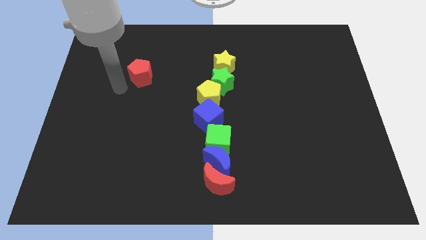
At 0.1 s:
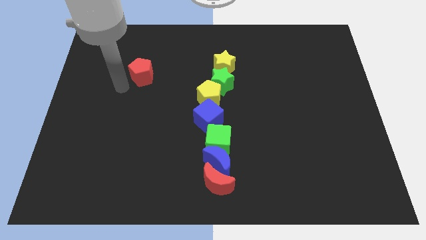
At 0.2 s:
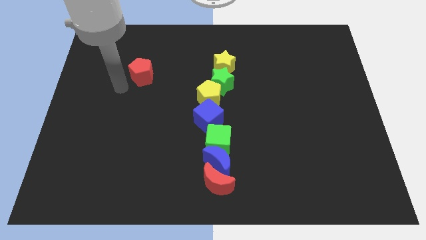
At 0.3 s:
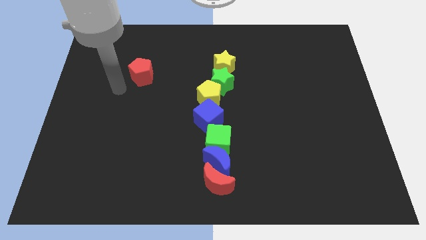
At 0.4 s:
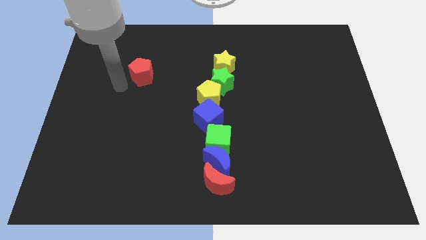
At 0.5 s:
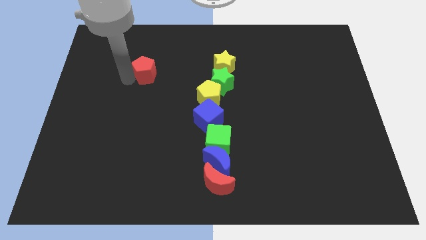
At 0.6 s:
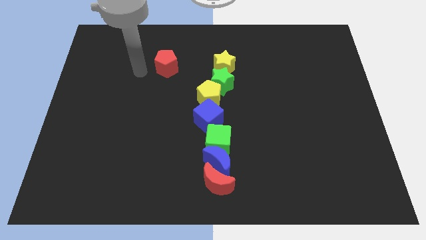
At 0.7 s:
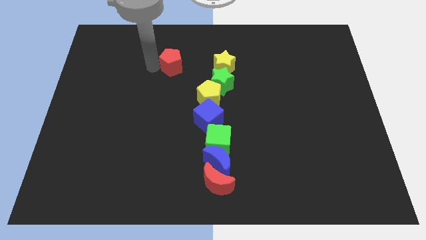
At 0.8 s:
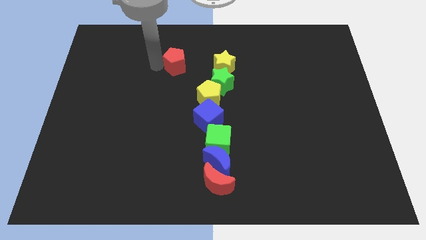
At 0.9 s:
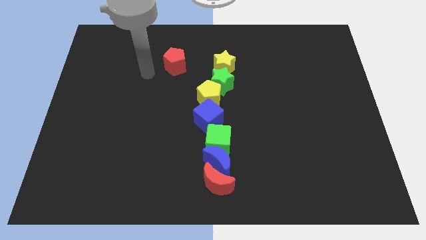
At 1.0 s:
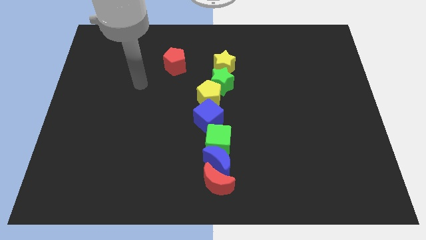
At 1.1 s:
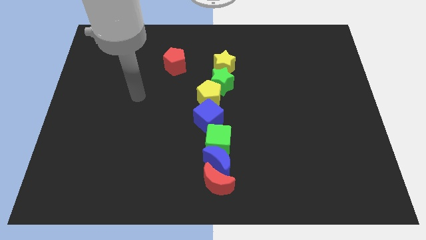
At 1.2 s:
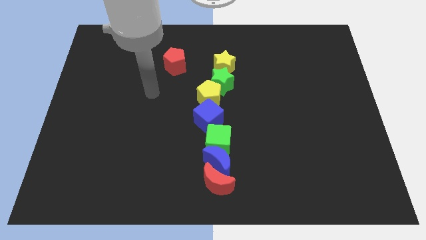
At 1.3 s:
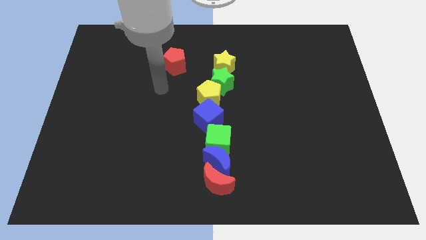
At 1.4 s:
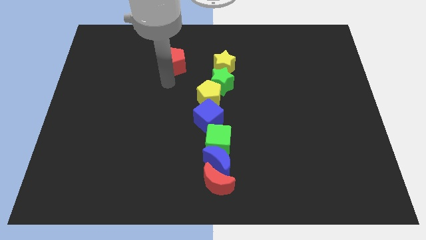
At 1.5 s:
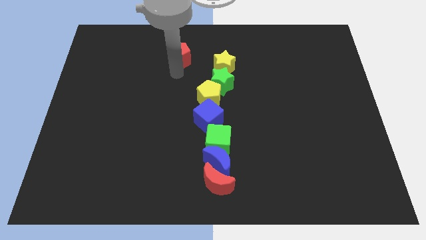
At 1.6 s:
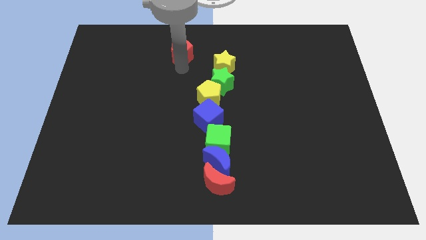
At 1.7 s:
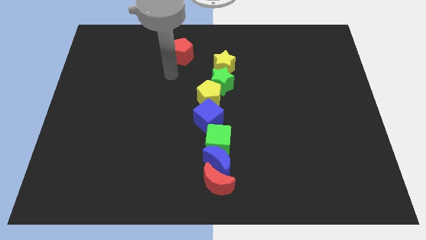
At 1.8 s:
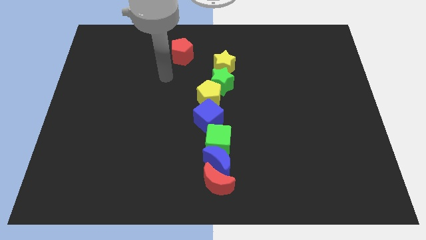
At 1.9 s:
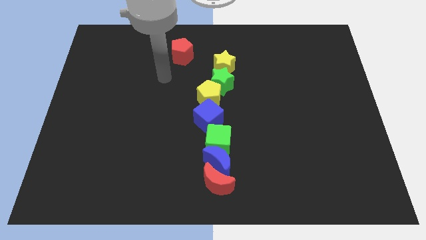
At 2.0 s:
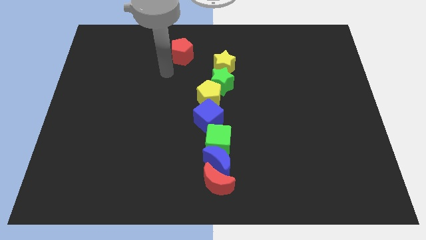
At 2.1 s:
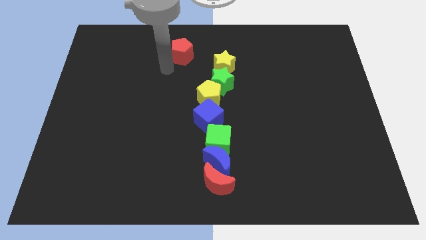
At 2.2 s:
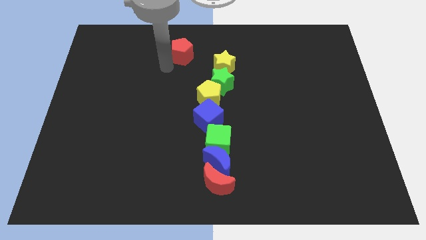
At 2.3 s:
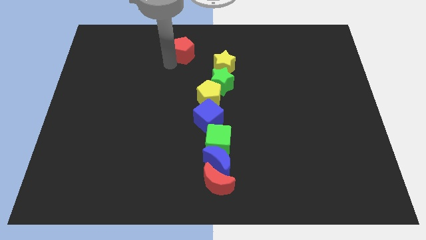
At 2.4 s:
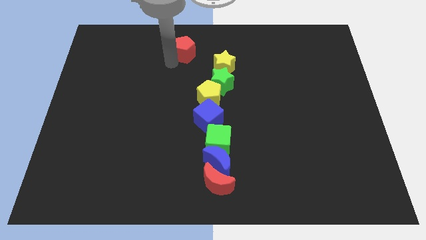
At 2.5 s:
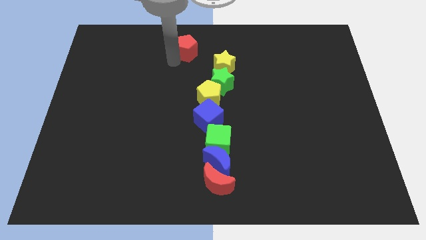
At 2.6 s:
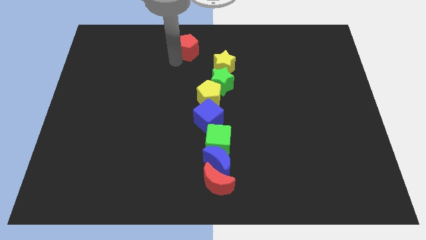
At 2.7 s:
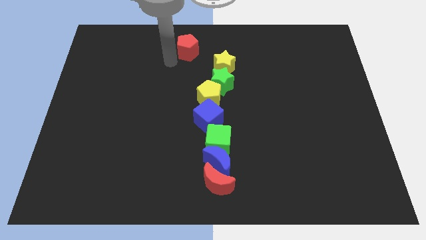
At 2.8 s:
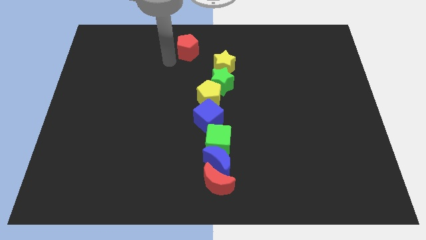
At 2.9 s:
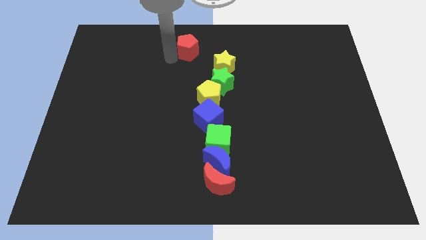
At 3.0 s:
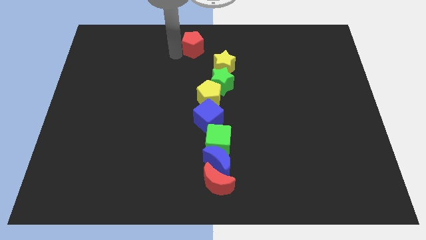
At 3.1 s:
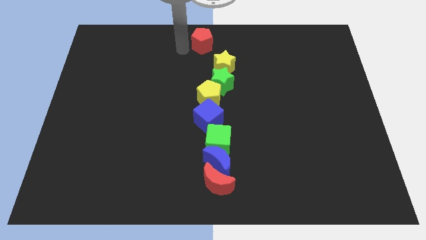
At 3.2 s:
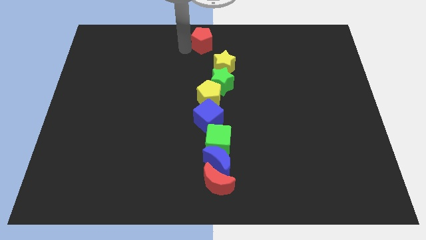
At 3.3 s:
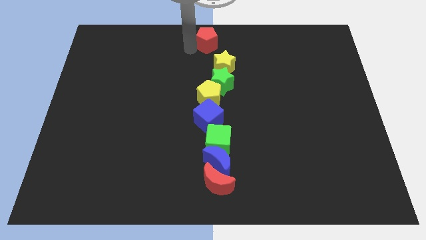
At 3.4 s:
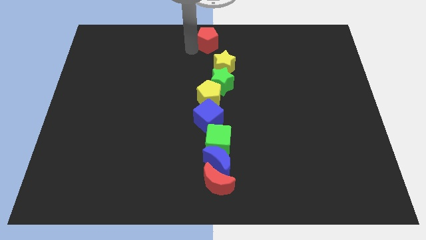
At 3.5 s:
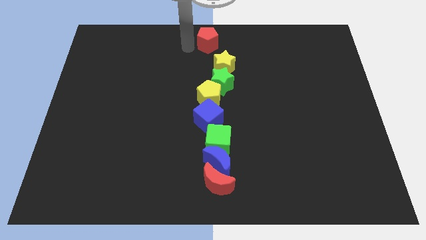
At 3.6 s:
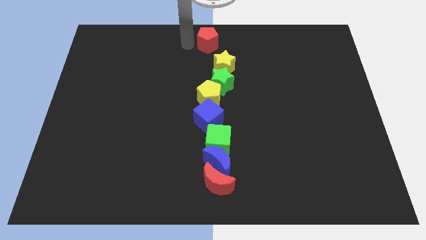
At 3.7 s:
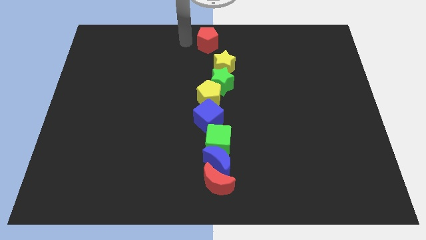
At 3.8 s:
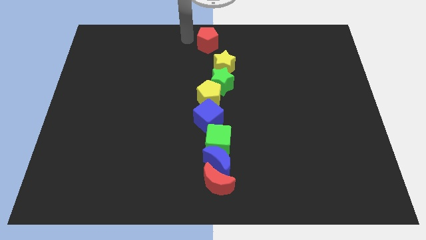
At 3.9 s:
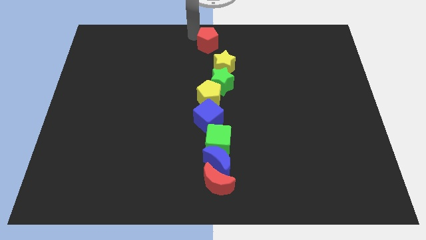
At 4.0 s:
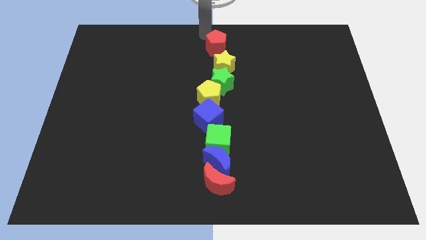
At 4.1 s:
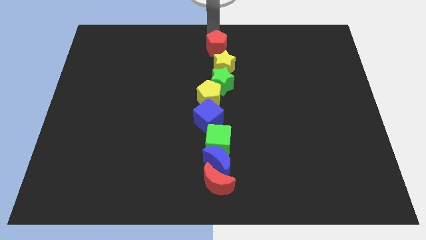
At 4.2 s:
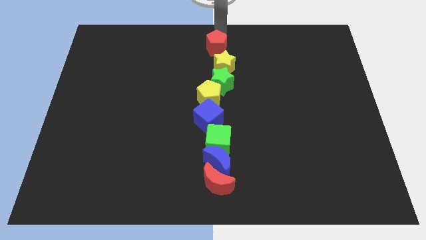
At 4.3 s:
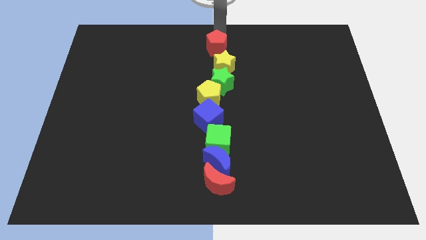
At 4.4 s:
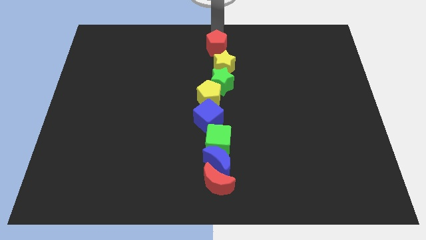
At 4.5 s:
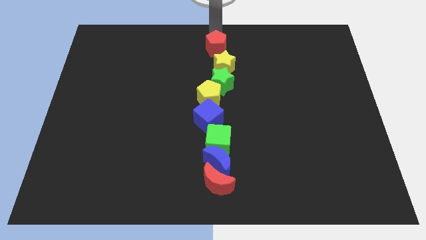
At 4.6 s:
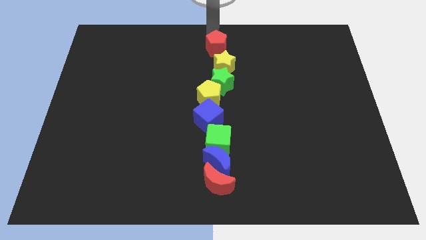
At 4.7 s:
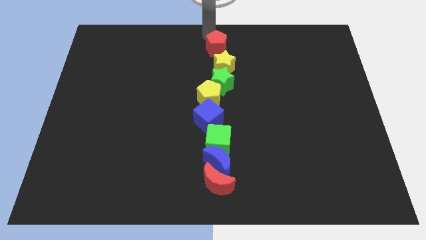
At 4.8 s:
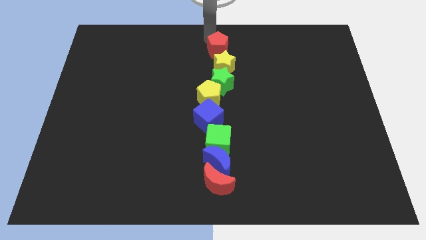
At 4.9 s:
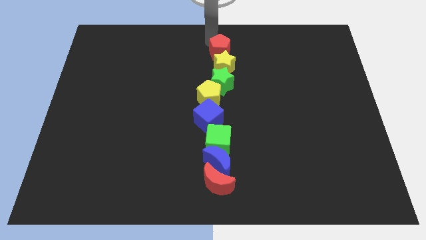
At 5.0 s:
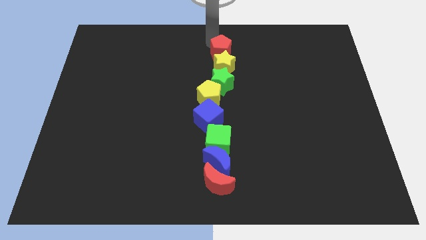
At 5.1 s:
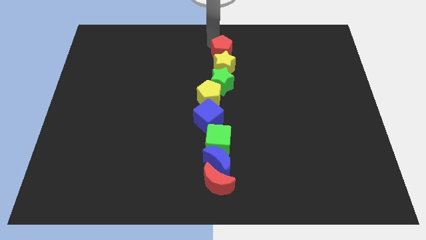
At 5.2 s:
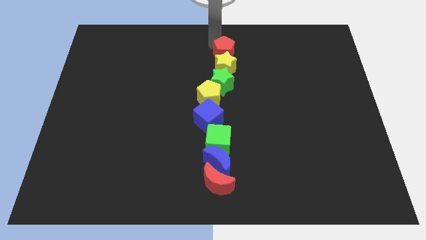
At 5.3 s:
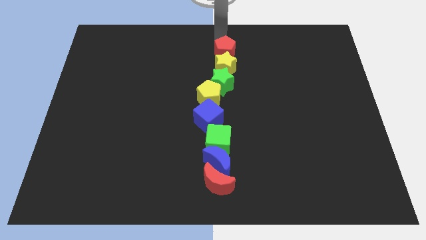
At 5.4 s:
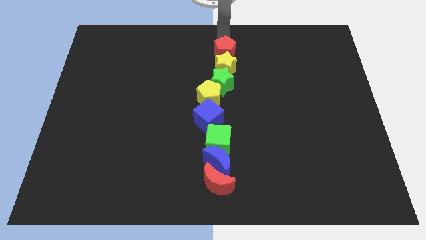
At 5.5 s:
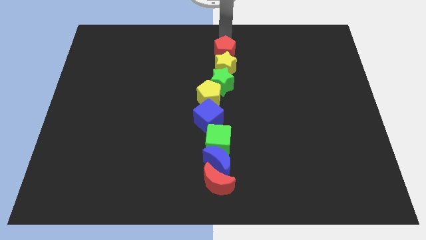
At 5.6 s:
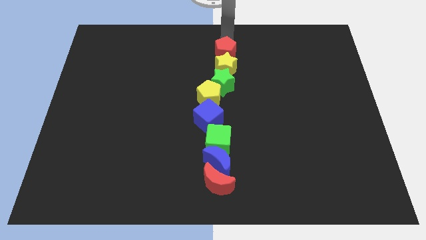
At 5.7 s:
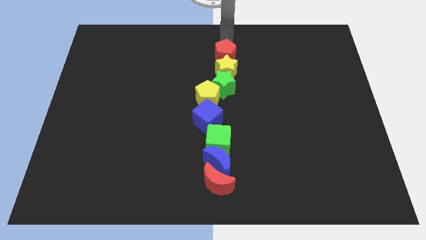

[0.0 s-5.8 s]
push the red pentagon into the yellow star

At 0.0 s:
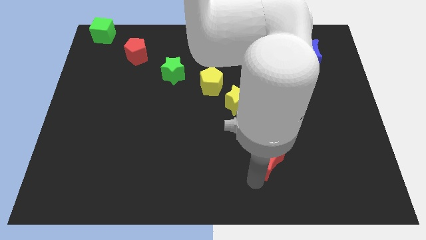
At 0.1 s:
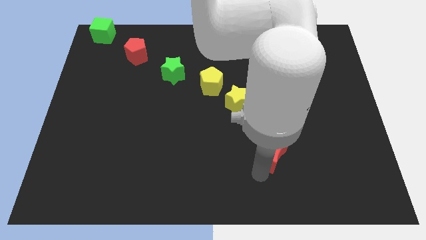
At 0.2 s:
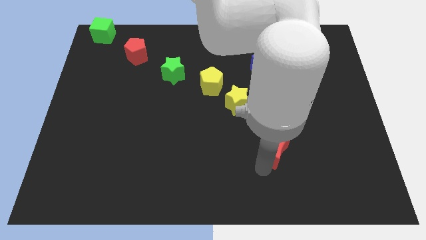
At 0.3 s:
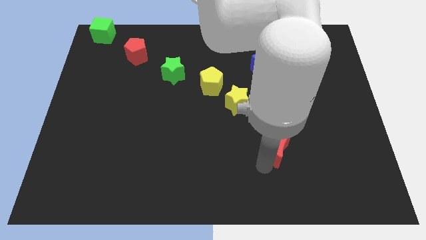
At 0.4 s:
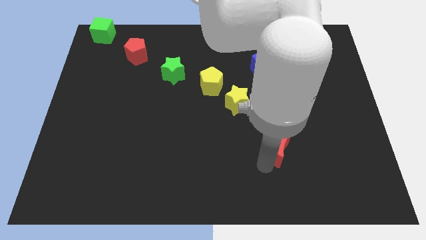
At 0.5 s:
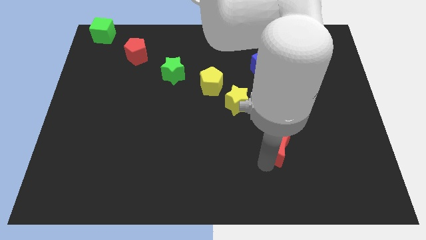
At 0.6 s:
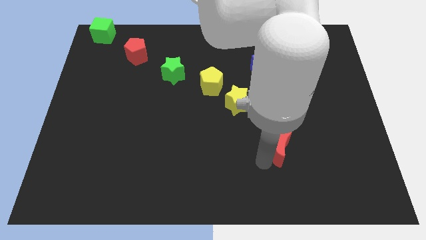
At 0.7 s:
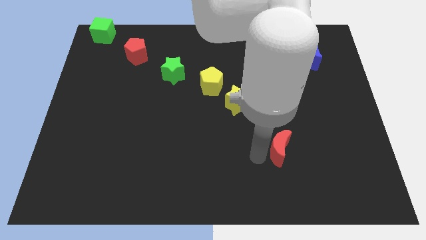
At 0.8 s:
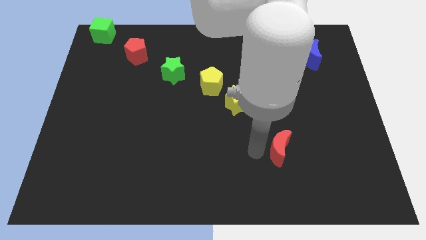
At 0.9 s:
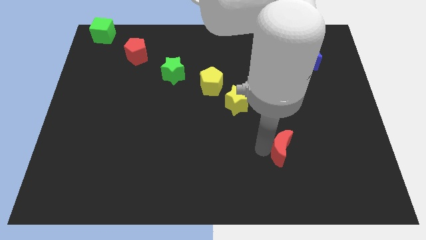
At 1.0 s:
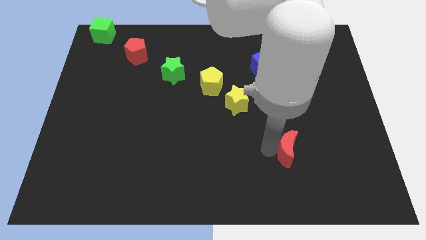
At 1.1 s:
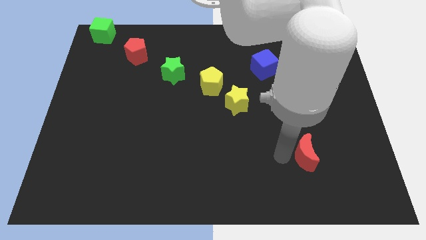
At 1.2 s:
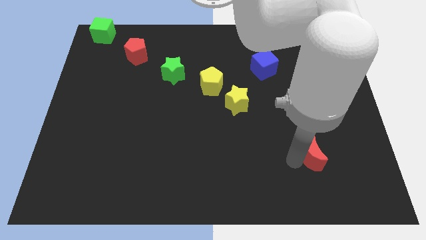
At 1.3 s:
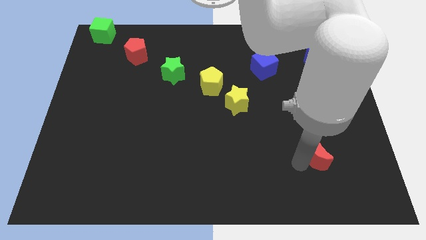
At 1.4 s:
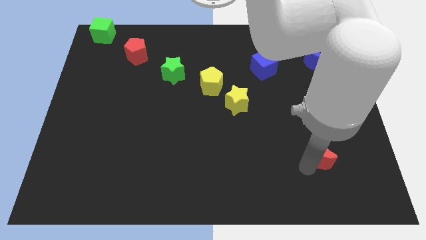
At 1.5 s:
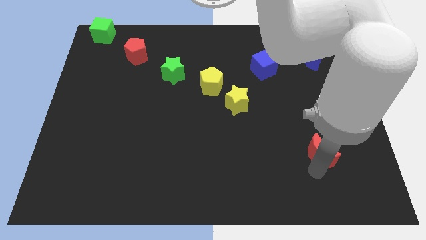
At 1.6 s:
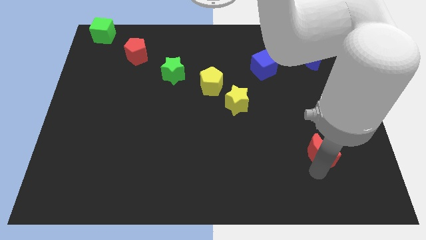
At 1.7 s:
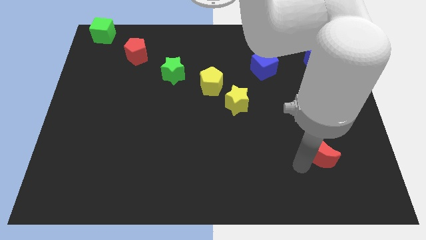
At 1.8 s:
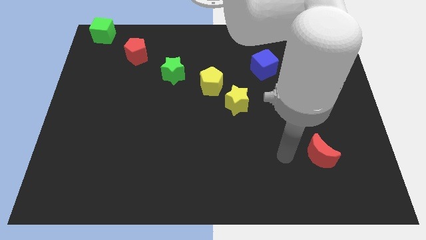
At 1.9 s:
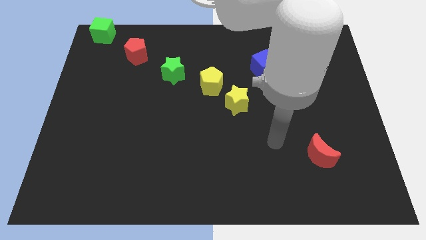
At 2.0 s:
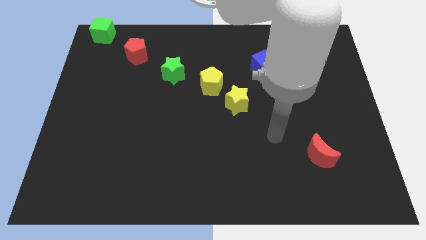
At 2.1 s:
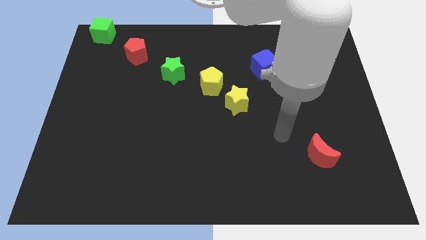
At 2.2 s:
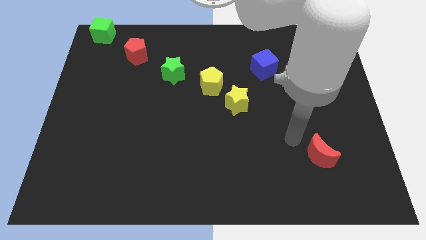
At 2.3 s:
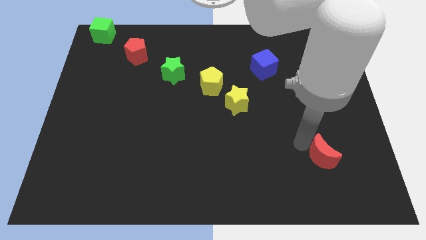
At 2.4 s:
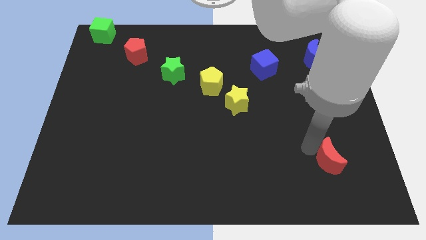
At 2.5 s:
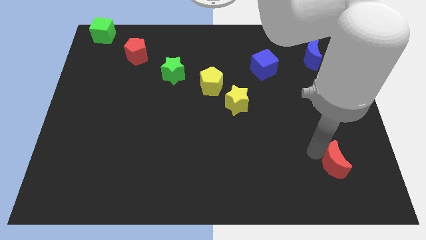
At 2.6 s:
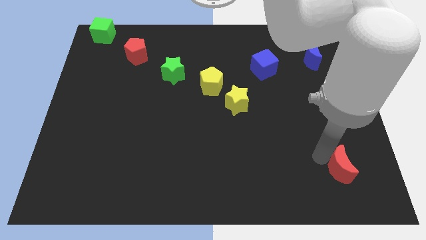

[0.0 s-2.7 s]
place red moon vertically below blue crescent

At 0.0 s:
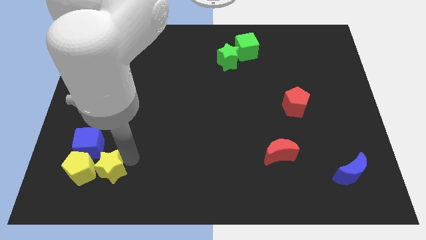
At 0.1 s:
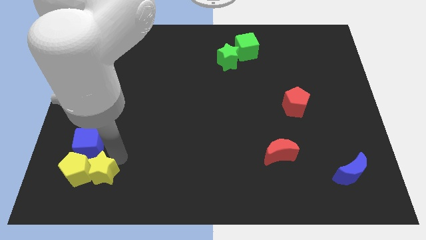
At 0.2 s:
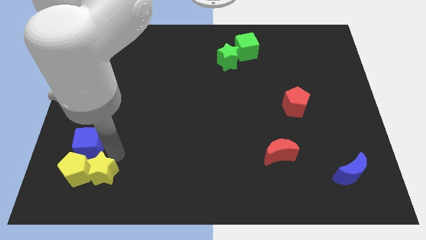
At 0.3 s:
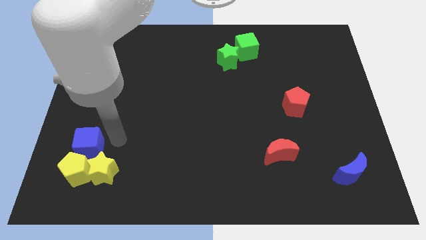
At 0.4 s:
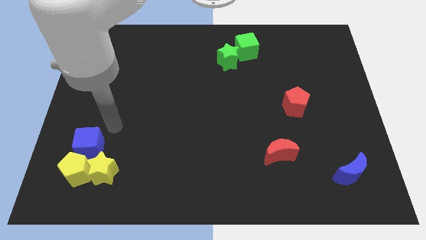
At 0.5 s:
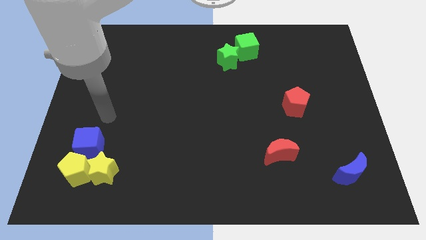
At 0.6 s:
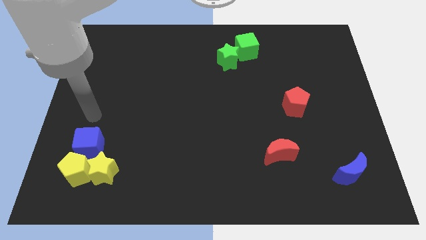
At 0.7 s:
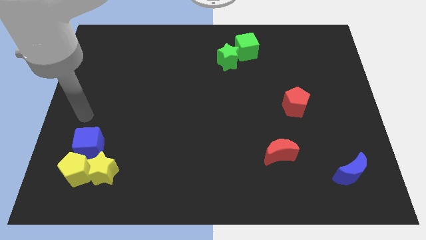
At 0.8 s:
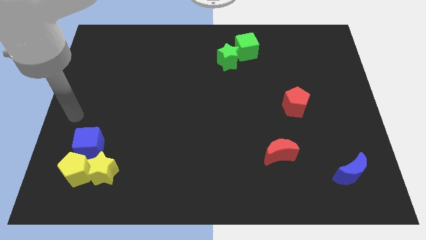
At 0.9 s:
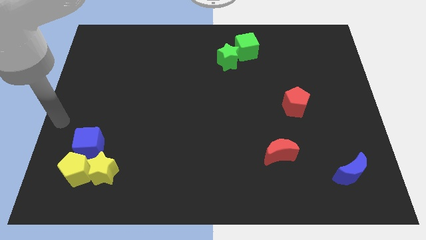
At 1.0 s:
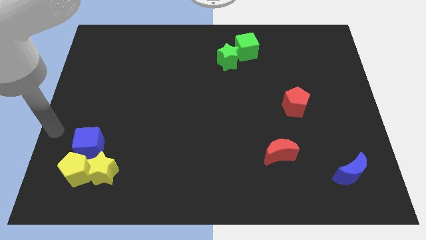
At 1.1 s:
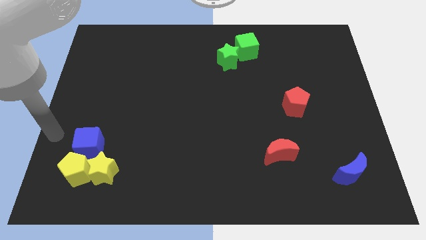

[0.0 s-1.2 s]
drag the arm towards the left side
